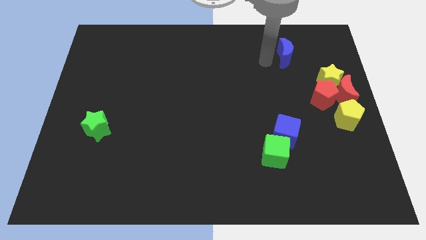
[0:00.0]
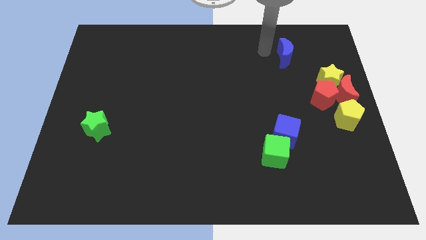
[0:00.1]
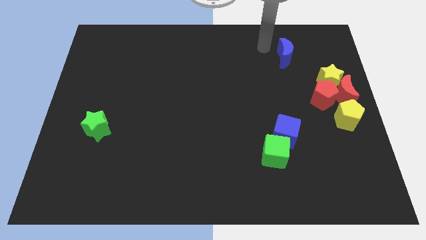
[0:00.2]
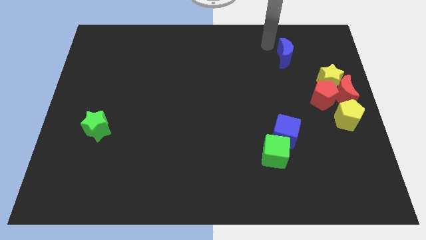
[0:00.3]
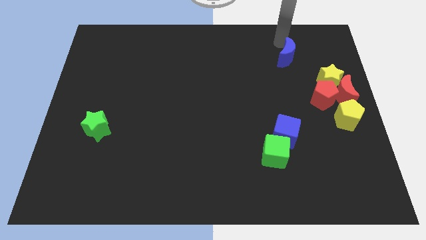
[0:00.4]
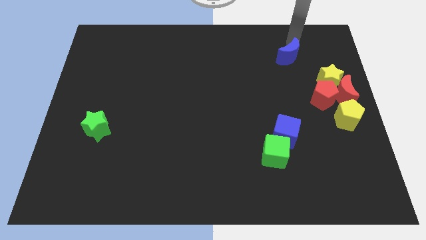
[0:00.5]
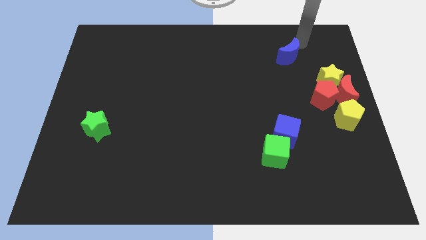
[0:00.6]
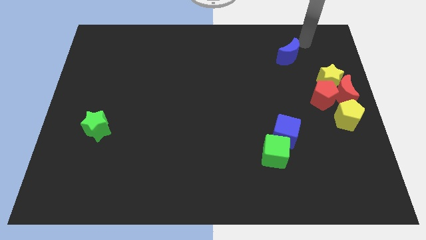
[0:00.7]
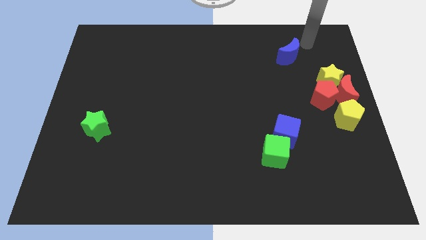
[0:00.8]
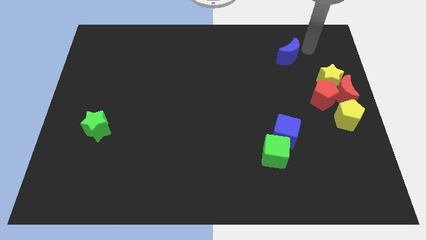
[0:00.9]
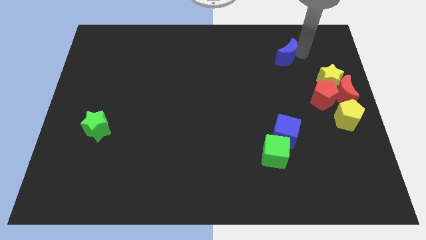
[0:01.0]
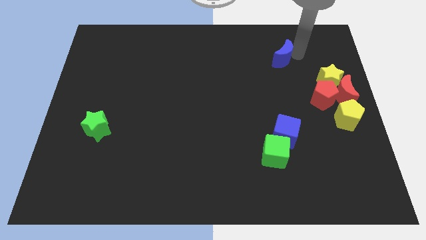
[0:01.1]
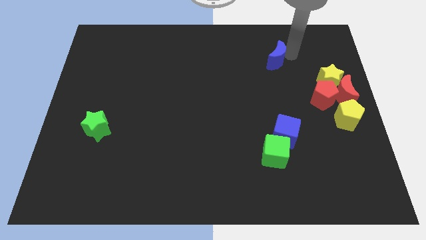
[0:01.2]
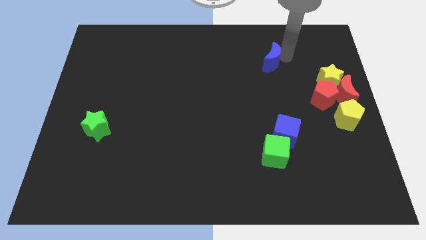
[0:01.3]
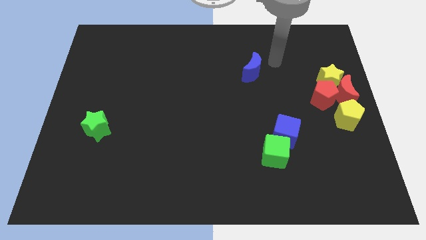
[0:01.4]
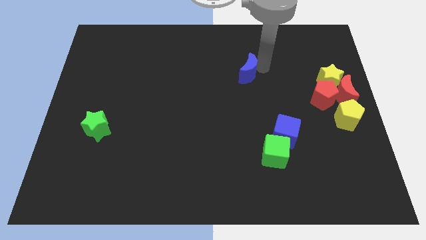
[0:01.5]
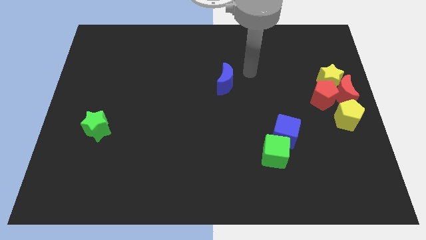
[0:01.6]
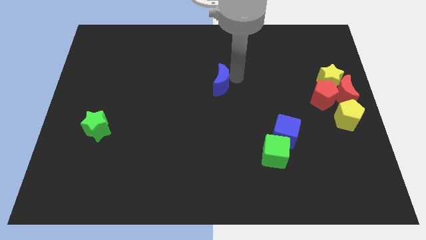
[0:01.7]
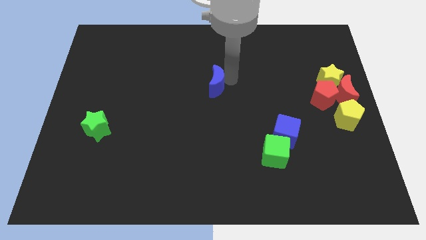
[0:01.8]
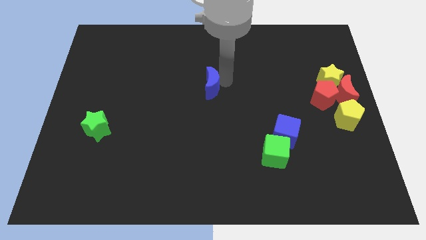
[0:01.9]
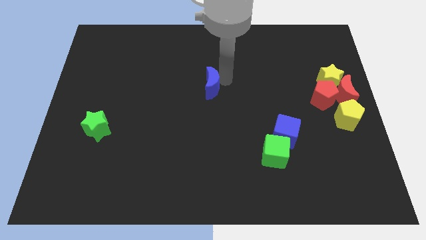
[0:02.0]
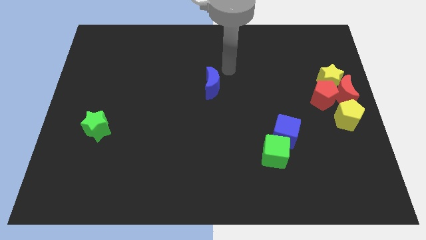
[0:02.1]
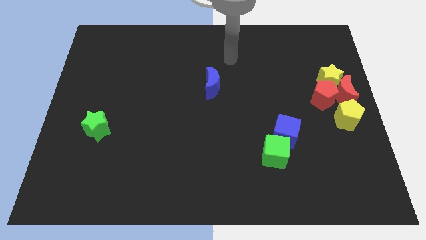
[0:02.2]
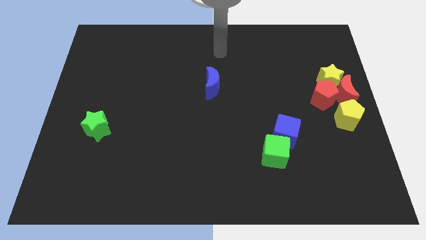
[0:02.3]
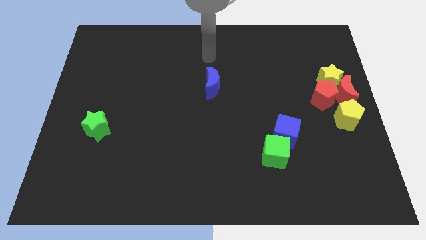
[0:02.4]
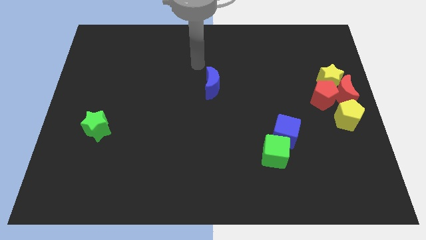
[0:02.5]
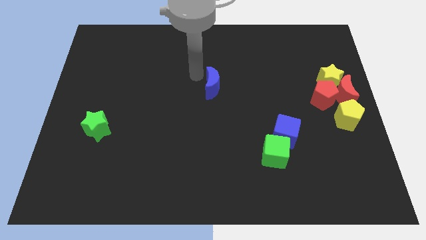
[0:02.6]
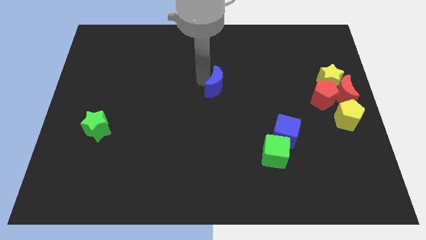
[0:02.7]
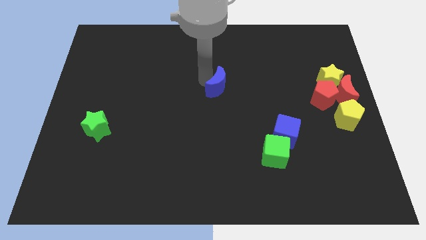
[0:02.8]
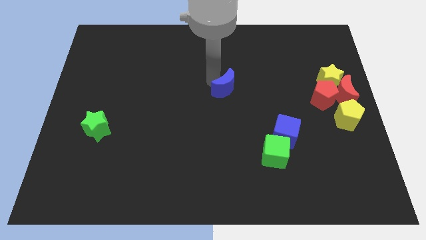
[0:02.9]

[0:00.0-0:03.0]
move the blue moon to the center

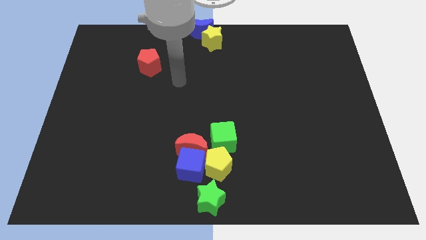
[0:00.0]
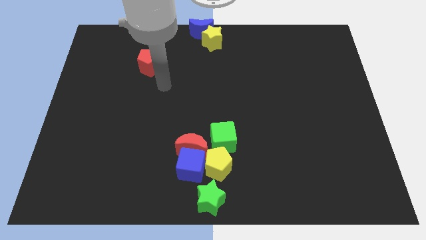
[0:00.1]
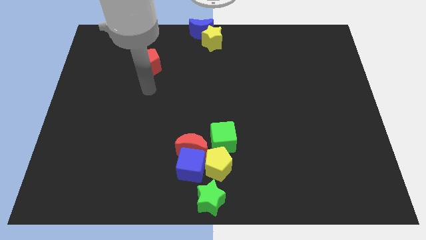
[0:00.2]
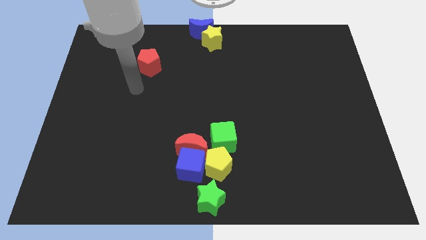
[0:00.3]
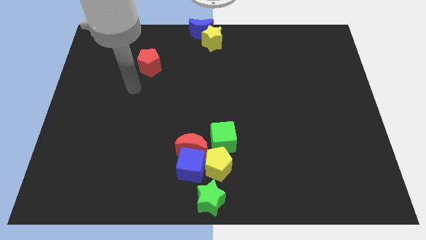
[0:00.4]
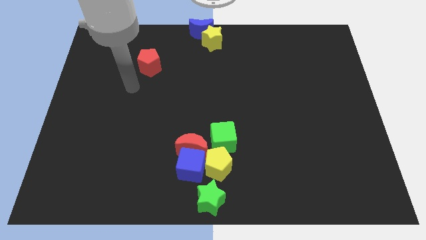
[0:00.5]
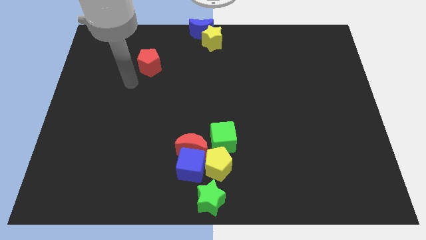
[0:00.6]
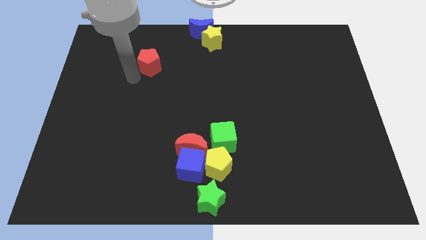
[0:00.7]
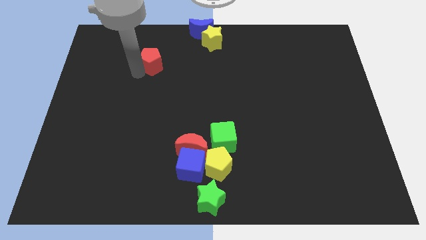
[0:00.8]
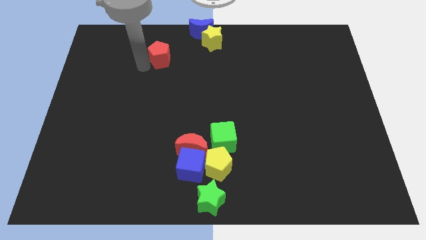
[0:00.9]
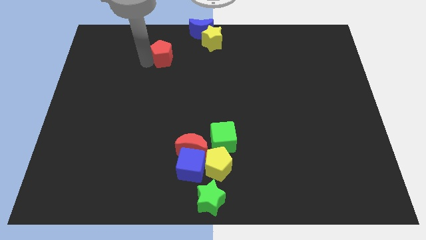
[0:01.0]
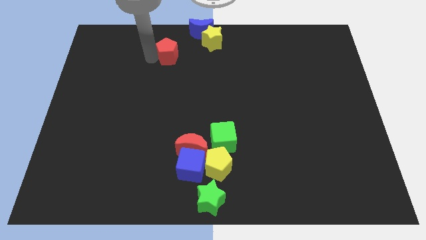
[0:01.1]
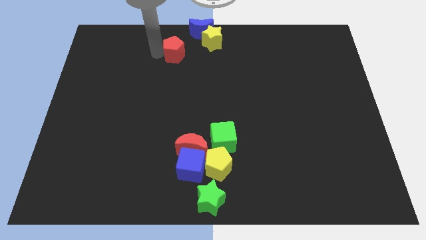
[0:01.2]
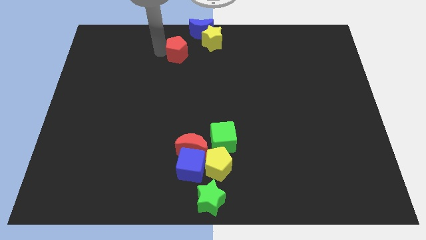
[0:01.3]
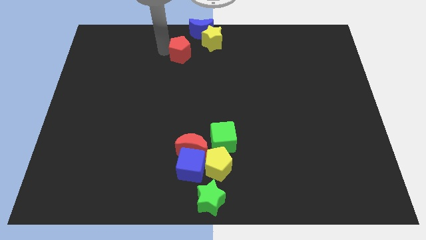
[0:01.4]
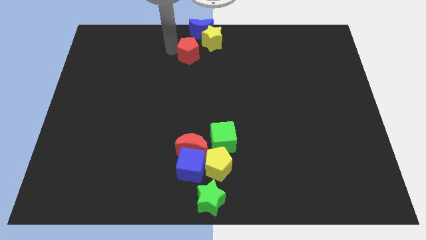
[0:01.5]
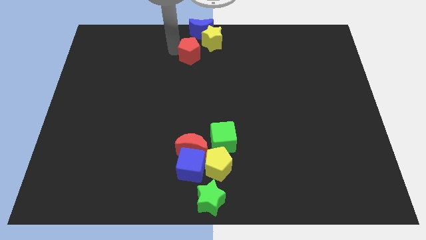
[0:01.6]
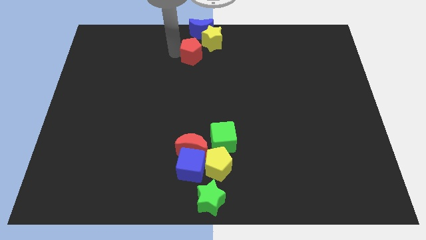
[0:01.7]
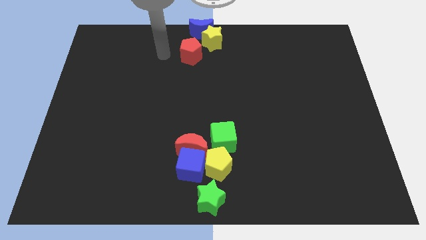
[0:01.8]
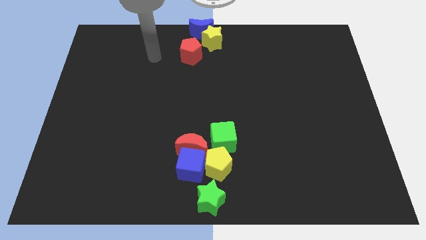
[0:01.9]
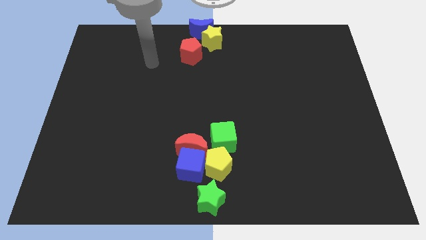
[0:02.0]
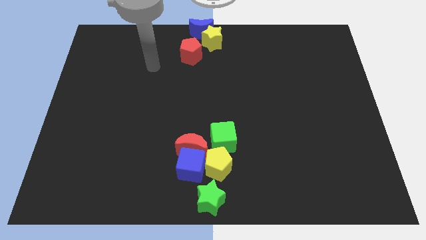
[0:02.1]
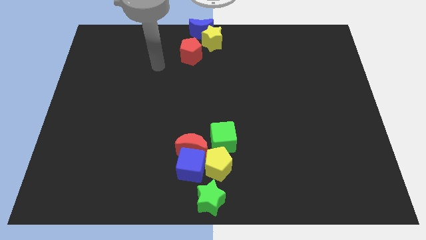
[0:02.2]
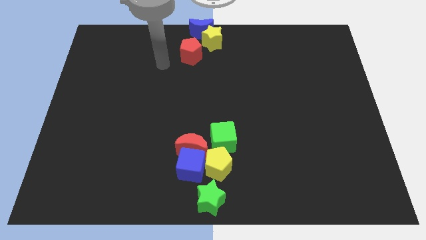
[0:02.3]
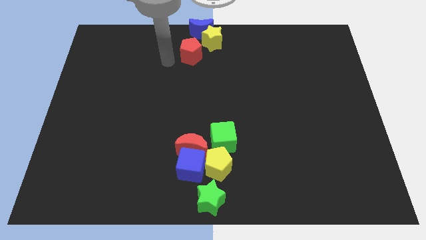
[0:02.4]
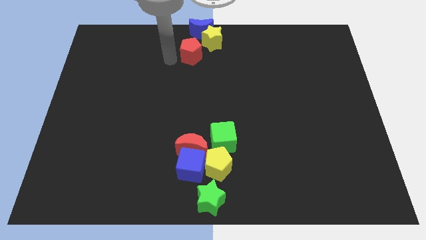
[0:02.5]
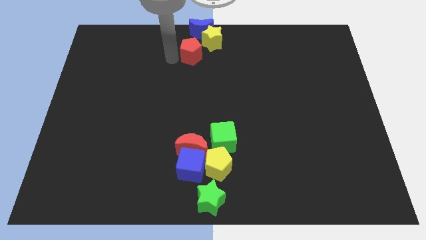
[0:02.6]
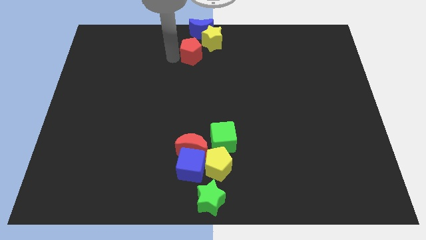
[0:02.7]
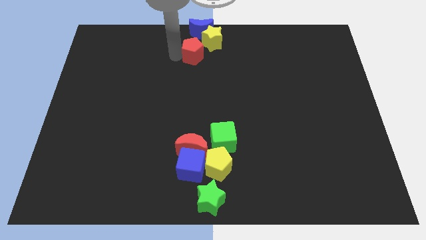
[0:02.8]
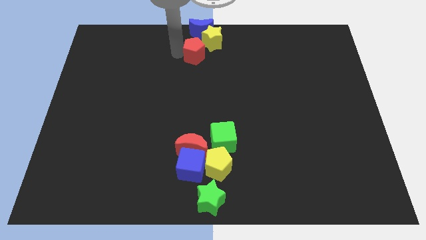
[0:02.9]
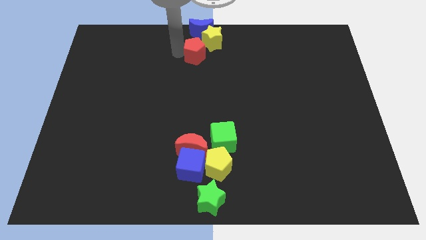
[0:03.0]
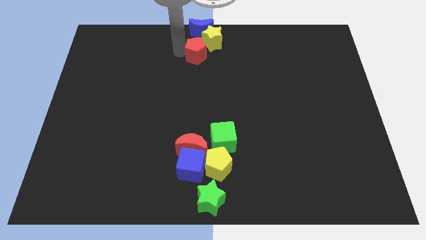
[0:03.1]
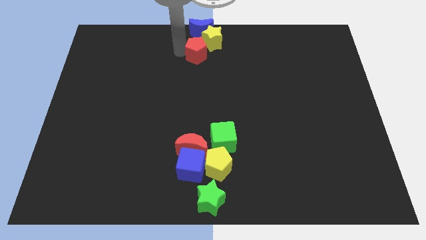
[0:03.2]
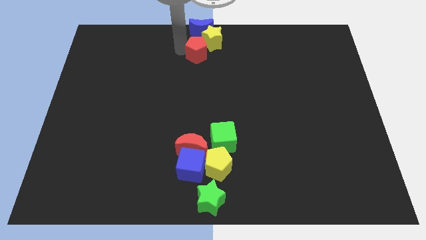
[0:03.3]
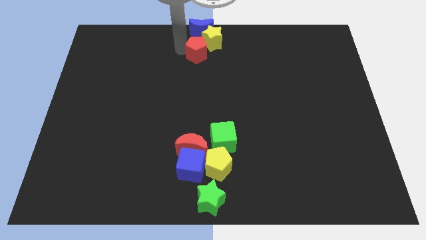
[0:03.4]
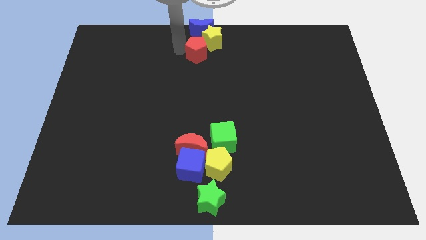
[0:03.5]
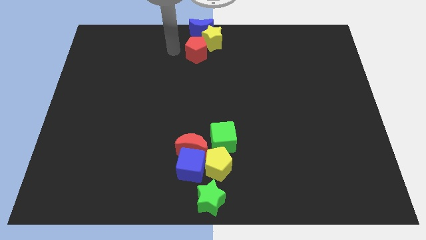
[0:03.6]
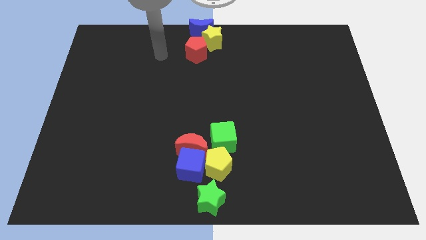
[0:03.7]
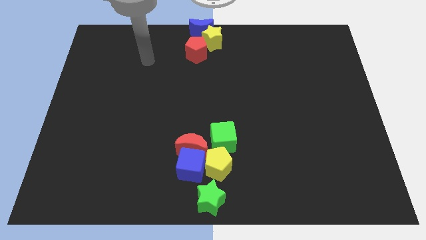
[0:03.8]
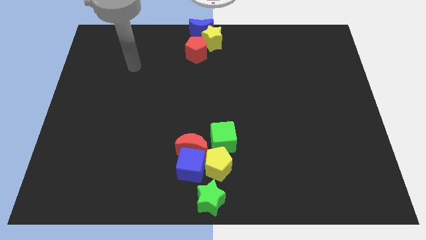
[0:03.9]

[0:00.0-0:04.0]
move the red pentagon left below the yellow star

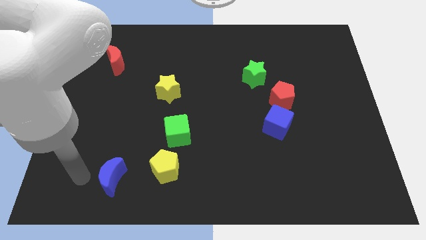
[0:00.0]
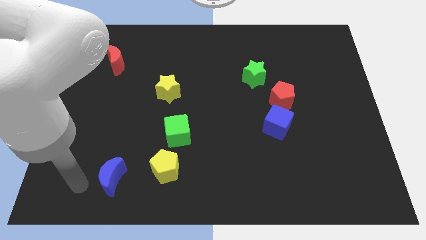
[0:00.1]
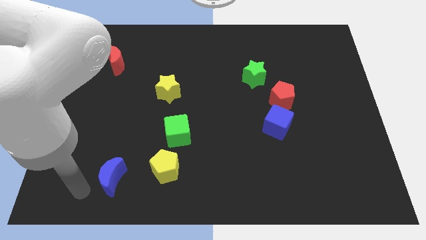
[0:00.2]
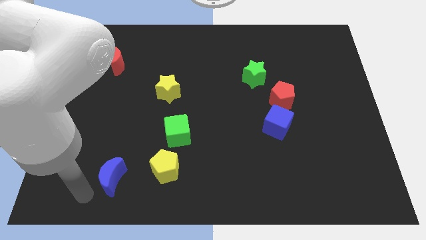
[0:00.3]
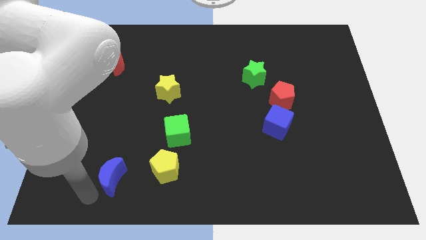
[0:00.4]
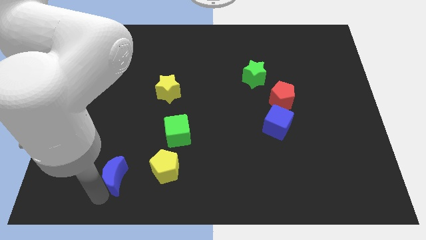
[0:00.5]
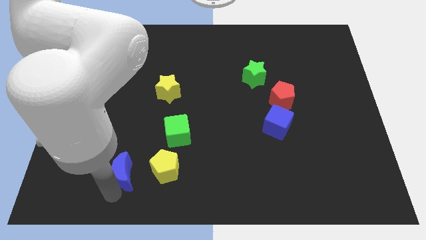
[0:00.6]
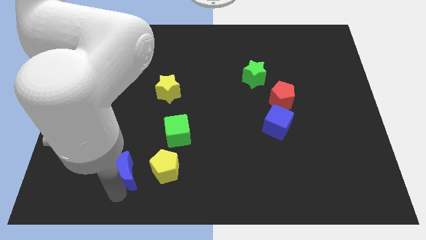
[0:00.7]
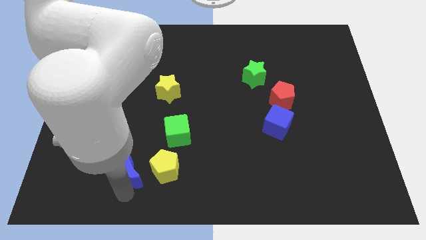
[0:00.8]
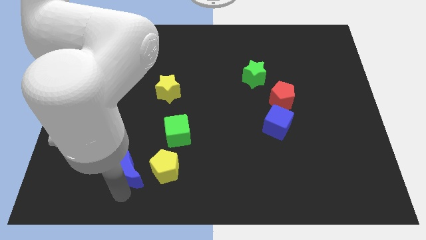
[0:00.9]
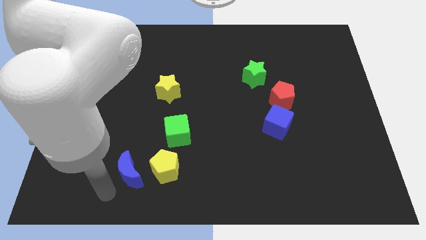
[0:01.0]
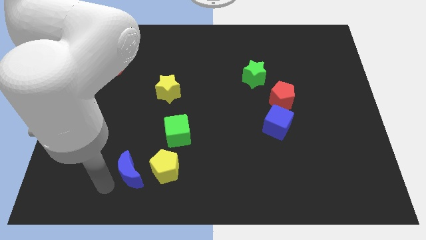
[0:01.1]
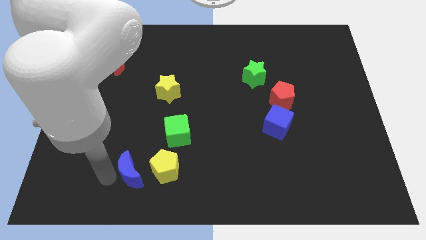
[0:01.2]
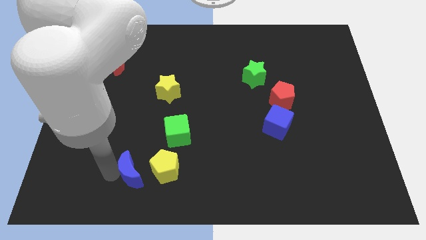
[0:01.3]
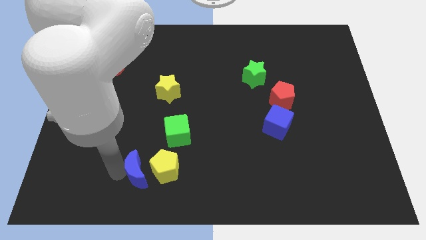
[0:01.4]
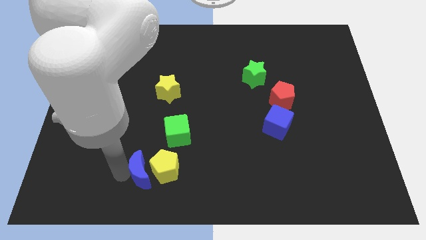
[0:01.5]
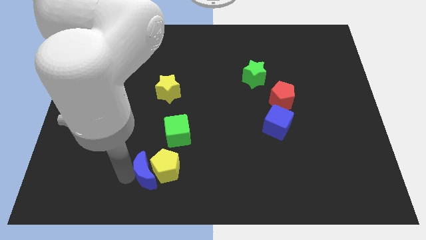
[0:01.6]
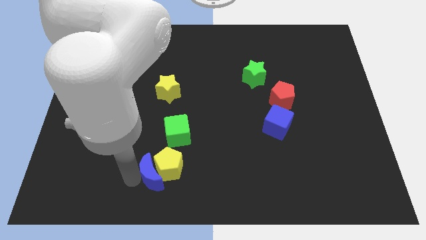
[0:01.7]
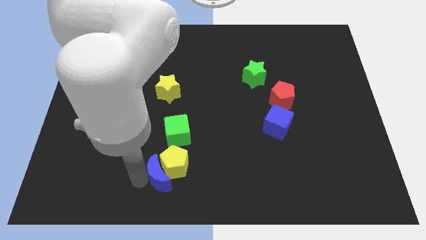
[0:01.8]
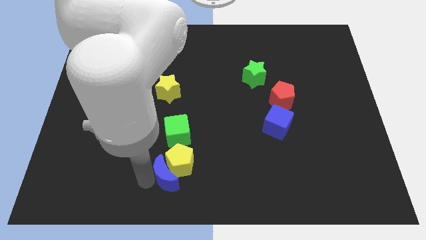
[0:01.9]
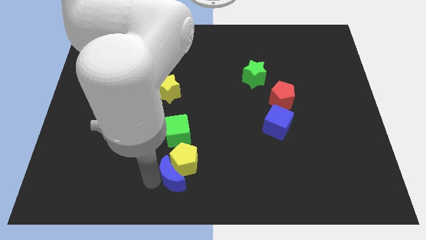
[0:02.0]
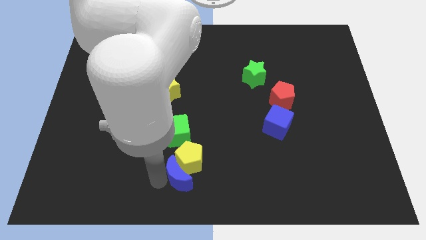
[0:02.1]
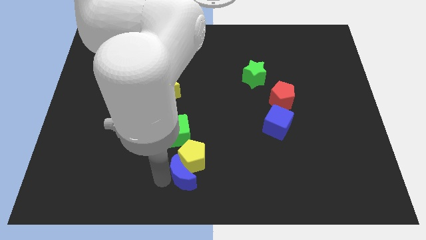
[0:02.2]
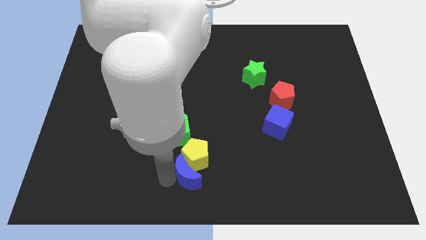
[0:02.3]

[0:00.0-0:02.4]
push the blue moon into the yellow pentagon
